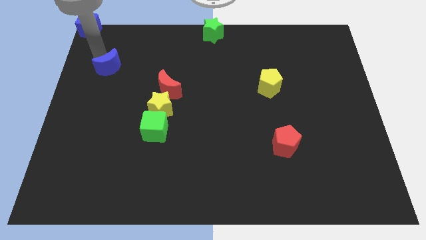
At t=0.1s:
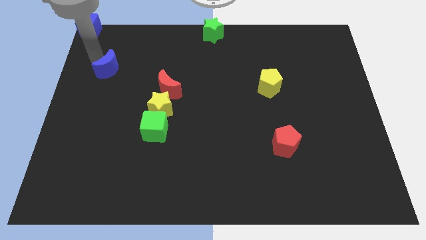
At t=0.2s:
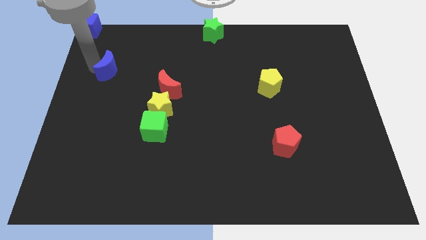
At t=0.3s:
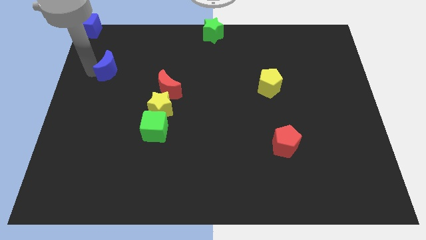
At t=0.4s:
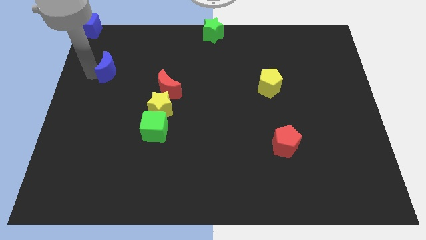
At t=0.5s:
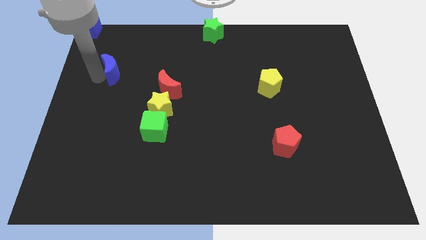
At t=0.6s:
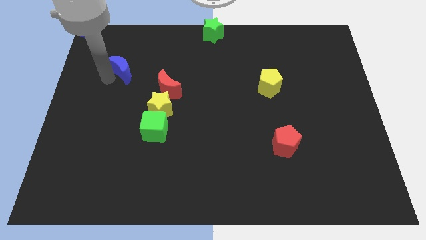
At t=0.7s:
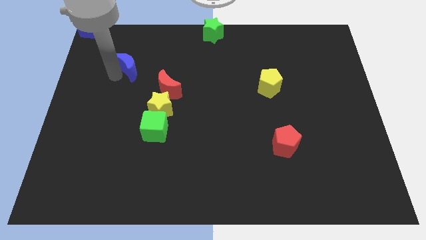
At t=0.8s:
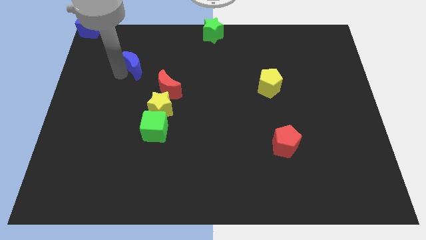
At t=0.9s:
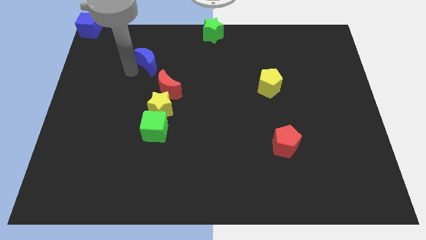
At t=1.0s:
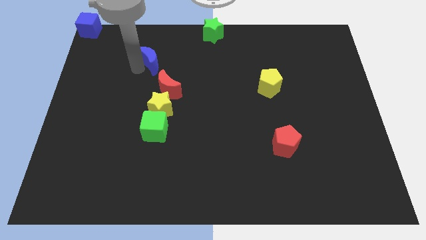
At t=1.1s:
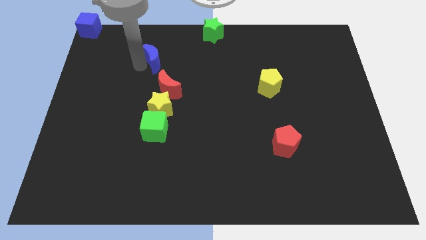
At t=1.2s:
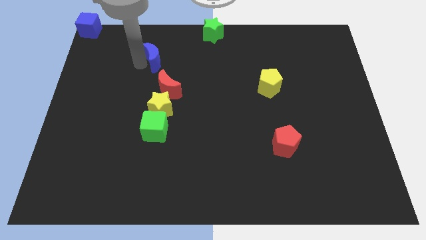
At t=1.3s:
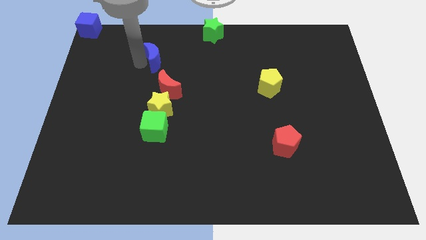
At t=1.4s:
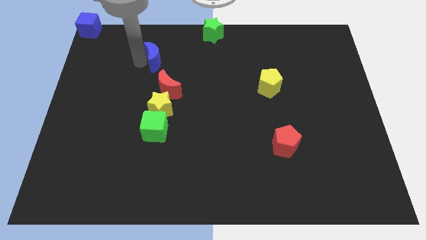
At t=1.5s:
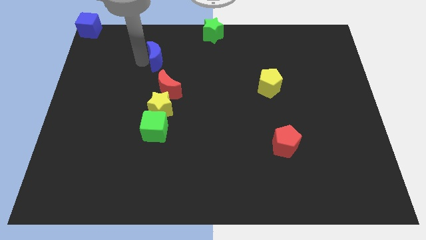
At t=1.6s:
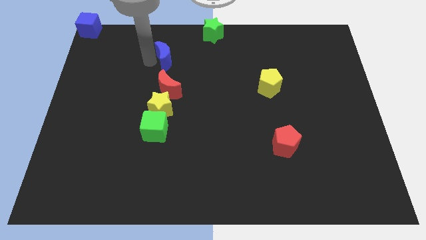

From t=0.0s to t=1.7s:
place the blue crescent above the red crescent

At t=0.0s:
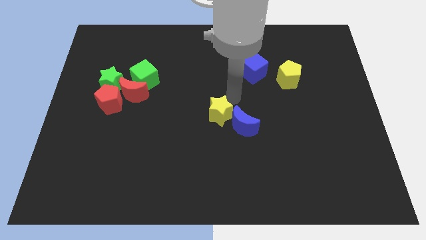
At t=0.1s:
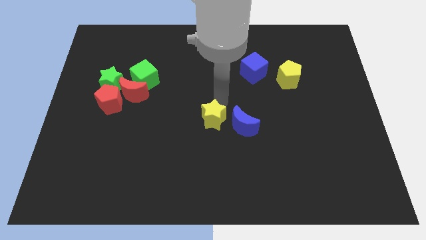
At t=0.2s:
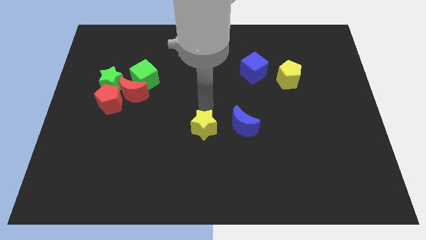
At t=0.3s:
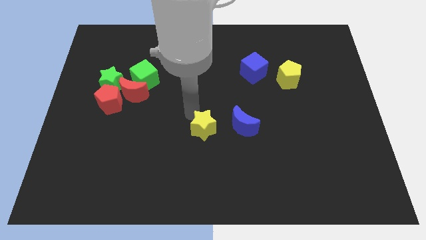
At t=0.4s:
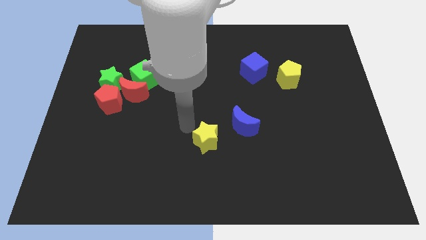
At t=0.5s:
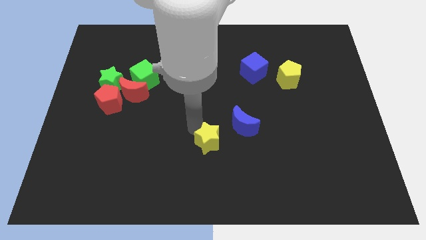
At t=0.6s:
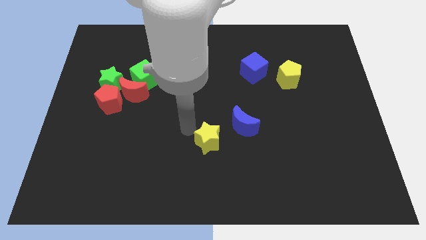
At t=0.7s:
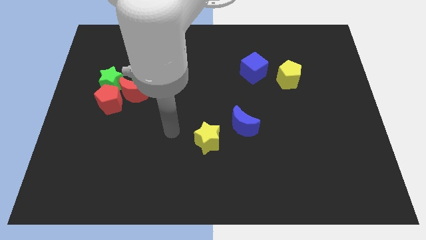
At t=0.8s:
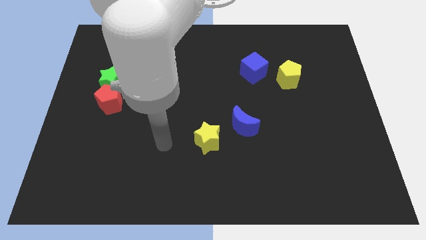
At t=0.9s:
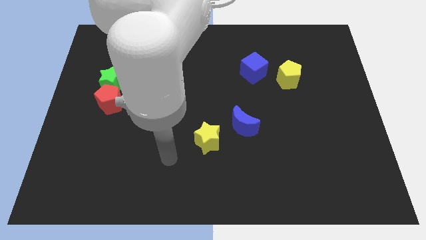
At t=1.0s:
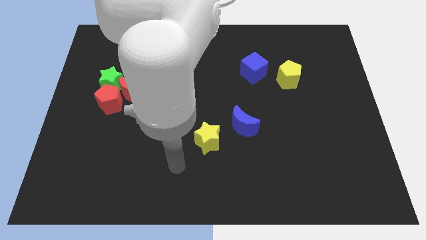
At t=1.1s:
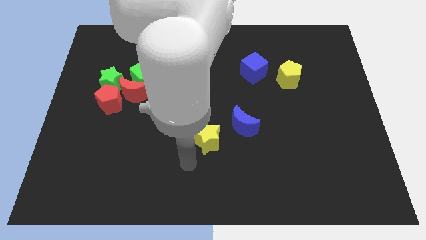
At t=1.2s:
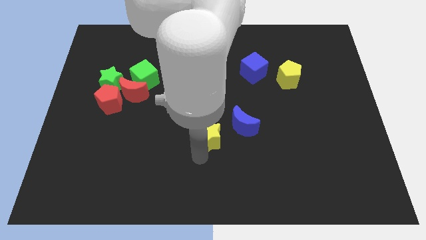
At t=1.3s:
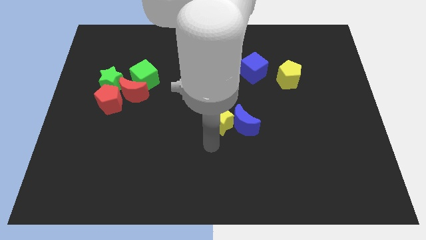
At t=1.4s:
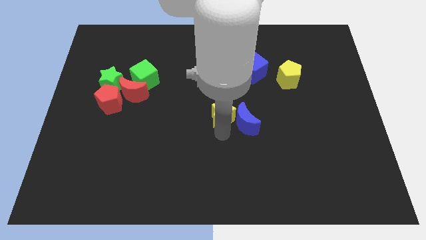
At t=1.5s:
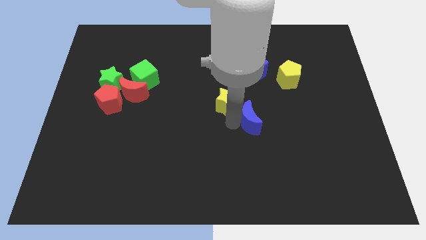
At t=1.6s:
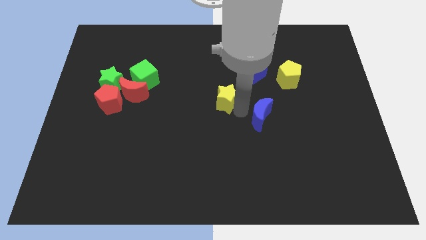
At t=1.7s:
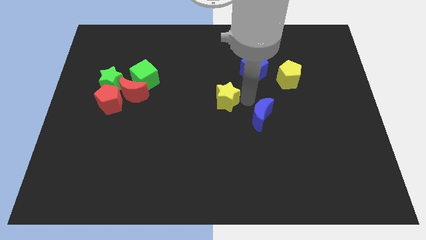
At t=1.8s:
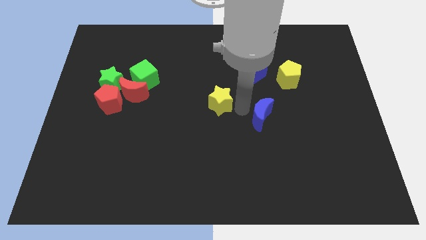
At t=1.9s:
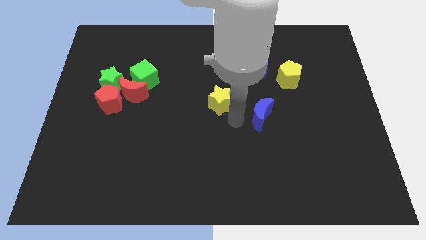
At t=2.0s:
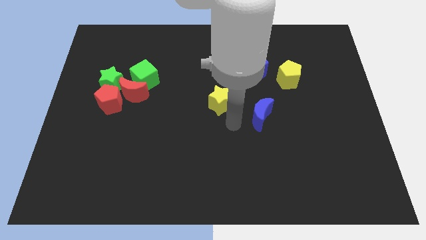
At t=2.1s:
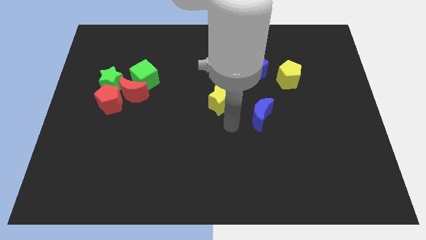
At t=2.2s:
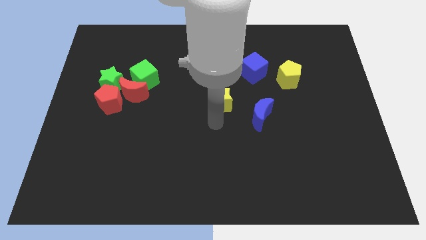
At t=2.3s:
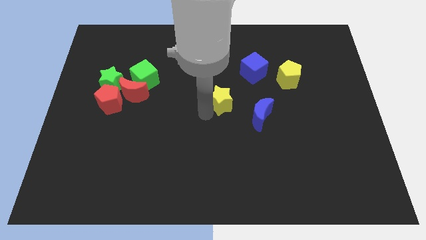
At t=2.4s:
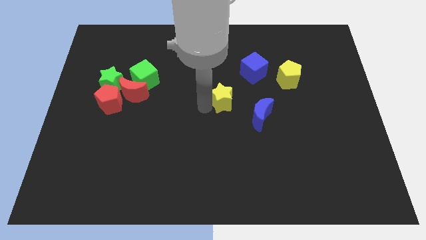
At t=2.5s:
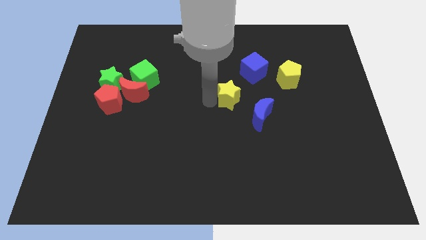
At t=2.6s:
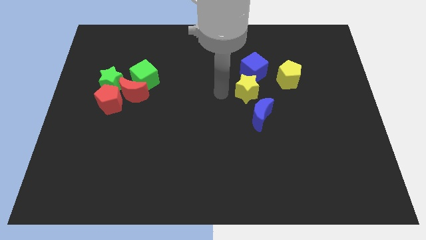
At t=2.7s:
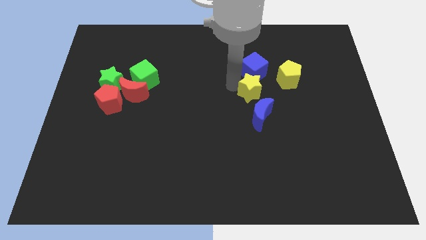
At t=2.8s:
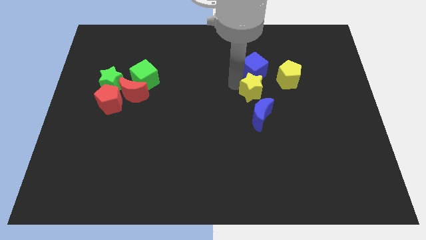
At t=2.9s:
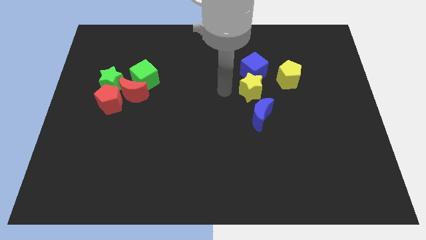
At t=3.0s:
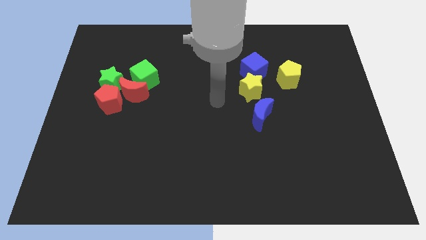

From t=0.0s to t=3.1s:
place the yellow star at the bottom of the blue cube

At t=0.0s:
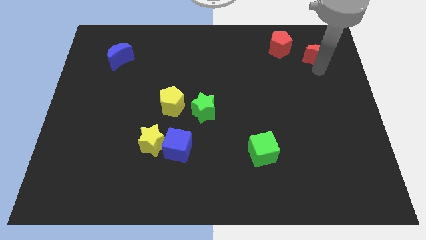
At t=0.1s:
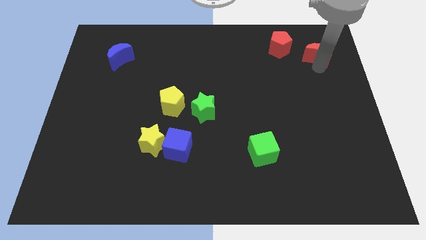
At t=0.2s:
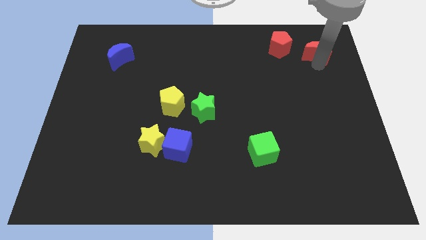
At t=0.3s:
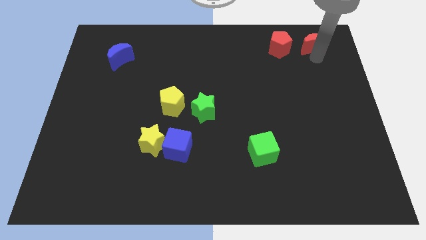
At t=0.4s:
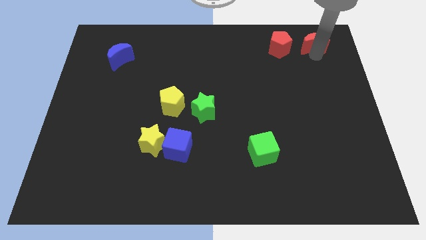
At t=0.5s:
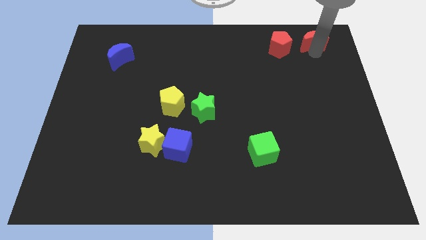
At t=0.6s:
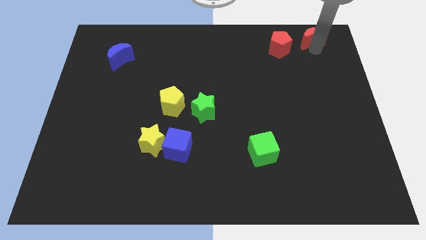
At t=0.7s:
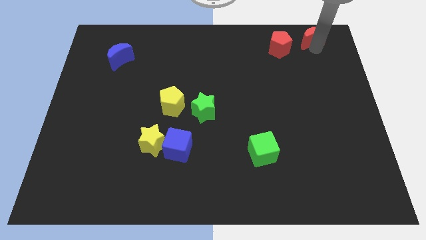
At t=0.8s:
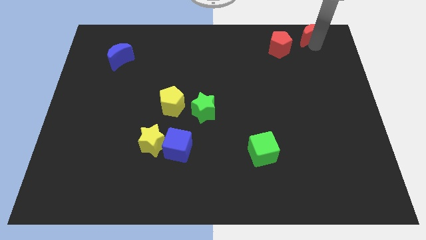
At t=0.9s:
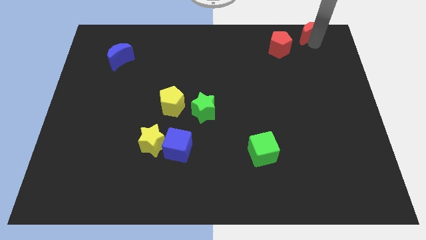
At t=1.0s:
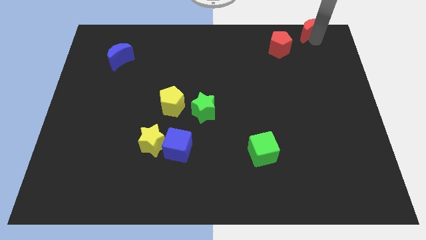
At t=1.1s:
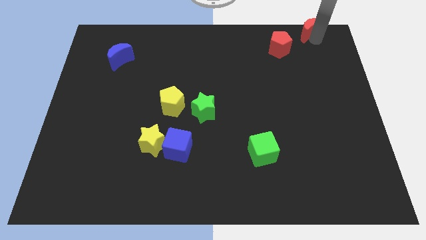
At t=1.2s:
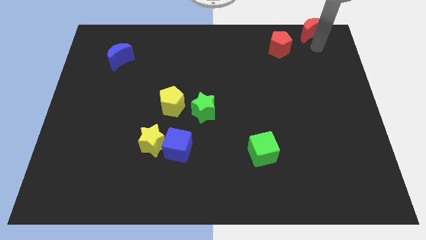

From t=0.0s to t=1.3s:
push the red crescent to the top right of the red pentagon

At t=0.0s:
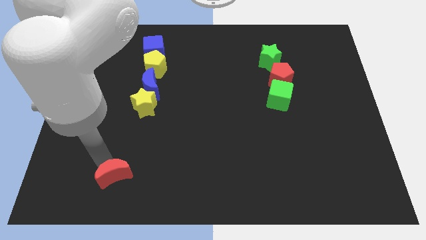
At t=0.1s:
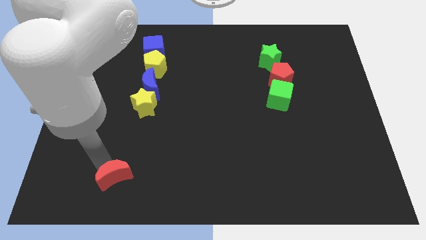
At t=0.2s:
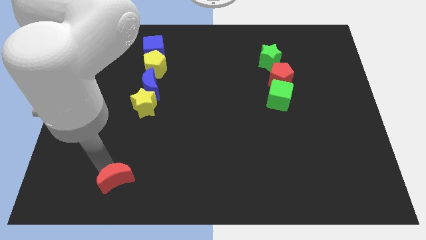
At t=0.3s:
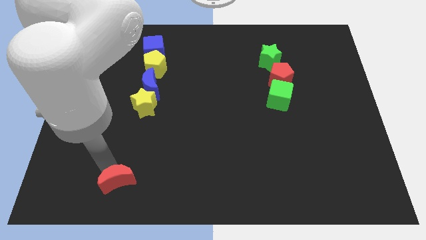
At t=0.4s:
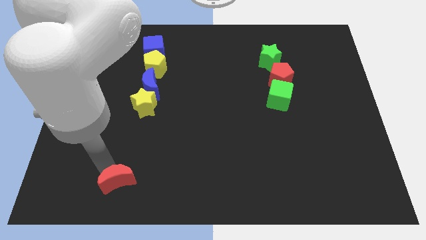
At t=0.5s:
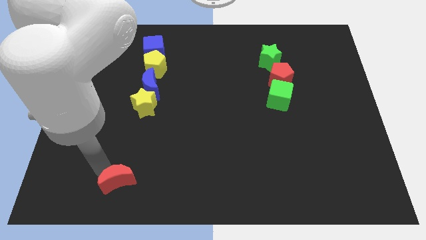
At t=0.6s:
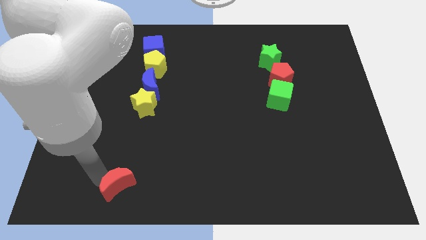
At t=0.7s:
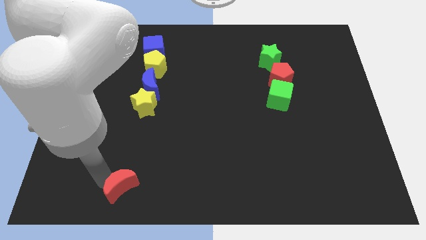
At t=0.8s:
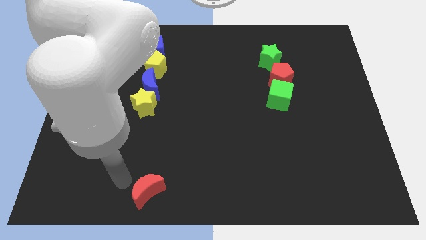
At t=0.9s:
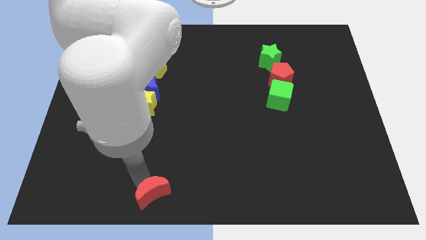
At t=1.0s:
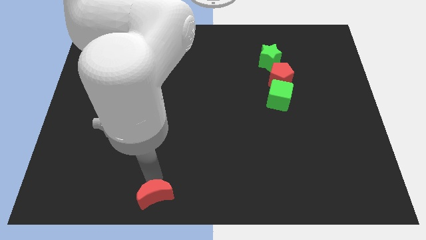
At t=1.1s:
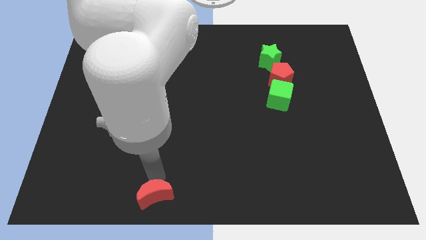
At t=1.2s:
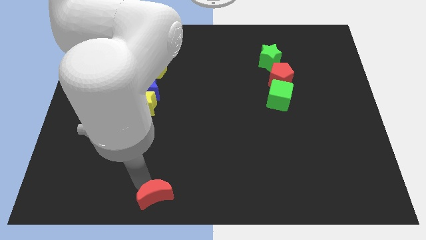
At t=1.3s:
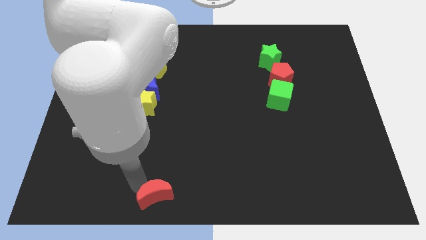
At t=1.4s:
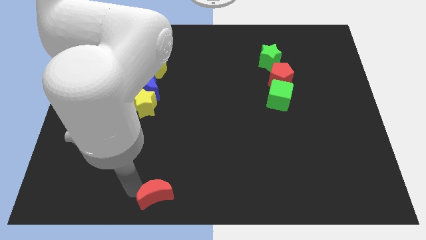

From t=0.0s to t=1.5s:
slide the red crescent slightly downwards

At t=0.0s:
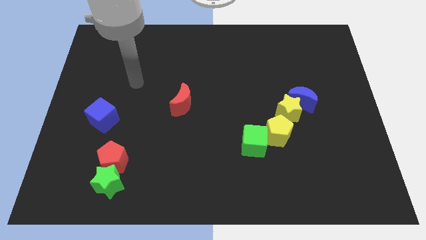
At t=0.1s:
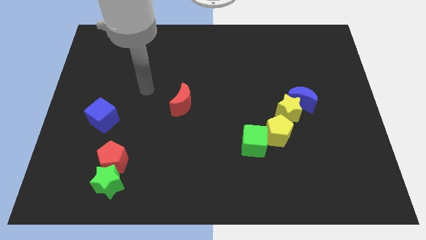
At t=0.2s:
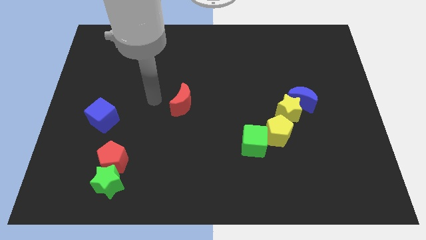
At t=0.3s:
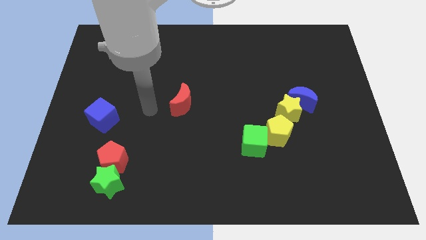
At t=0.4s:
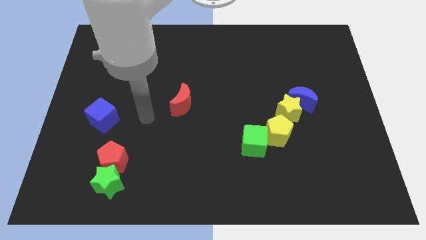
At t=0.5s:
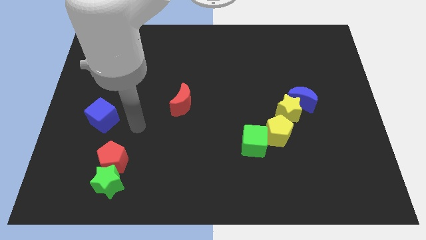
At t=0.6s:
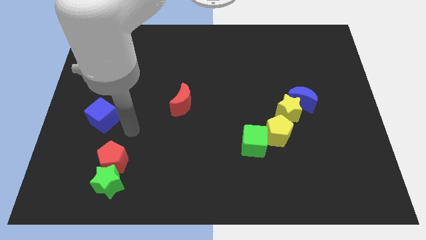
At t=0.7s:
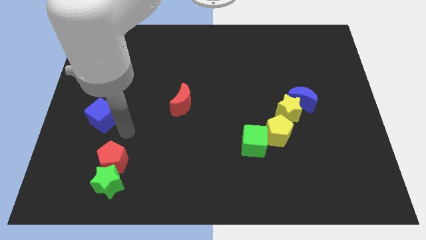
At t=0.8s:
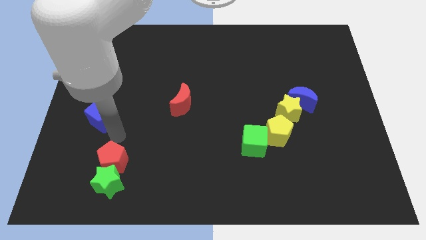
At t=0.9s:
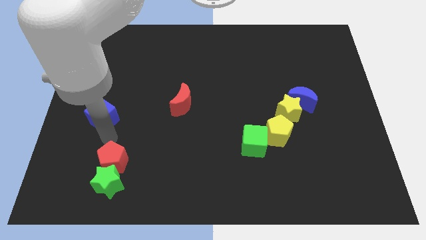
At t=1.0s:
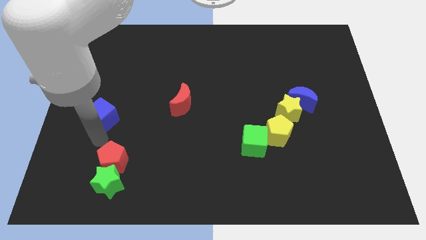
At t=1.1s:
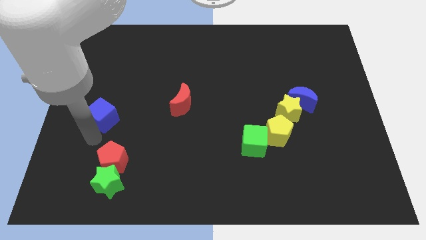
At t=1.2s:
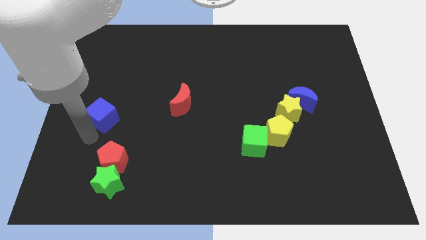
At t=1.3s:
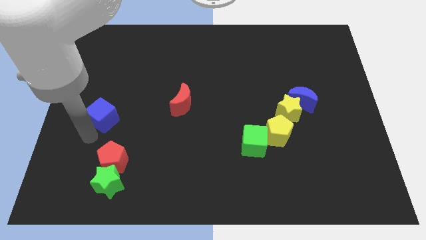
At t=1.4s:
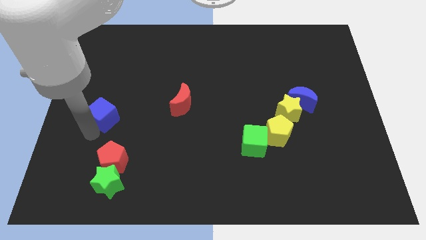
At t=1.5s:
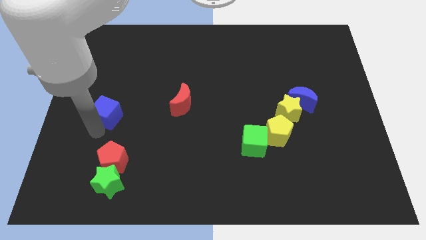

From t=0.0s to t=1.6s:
place arm at the bottom of blue cube
